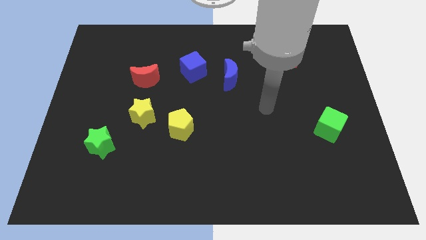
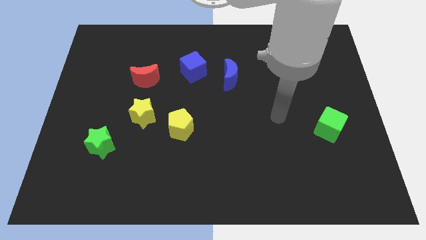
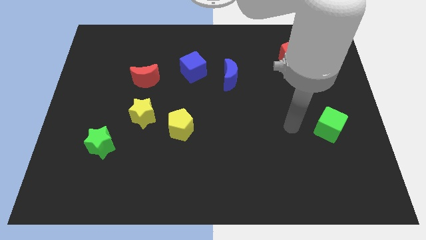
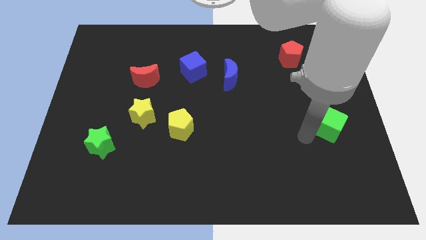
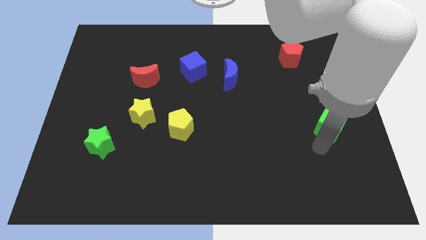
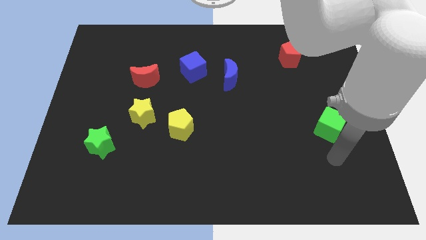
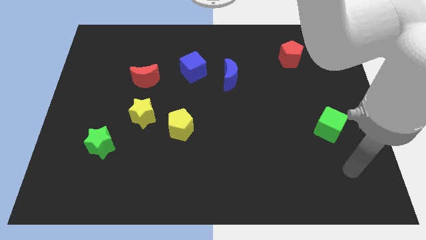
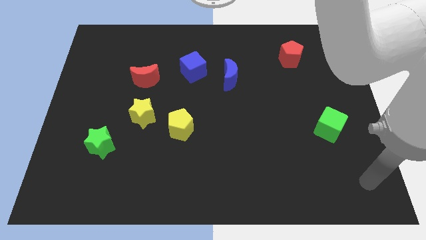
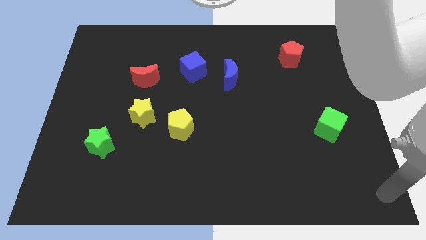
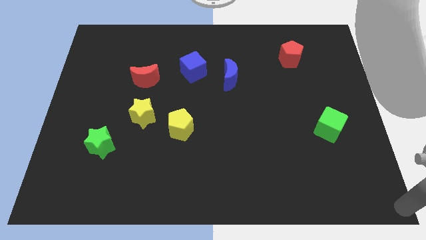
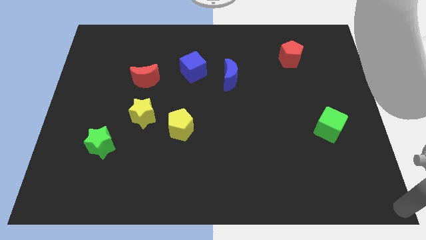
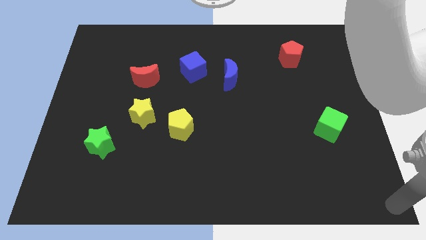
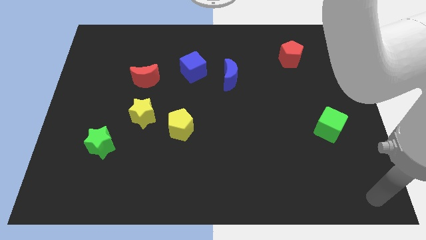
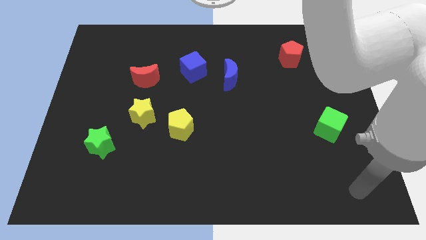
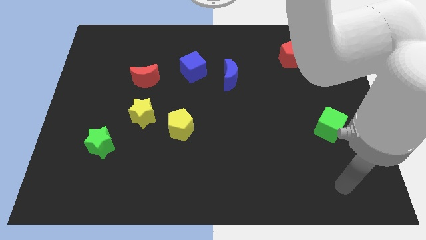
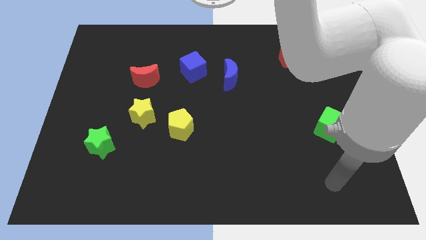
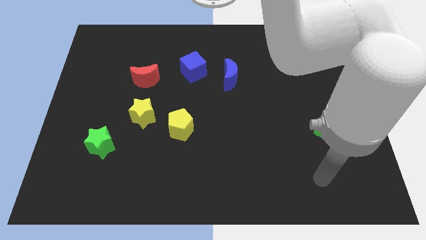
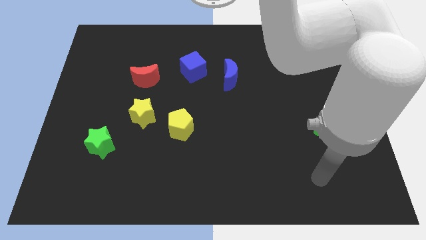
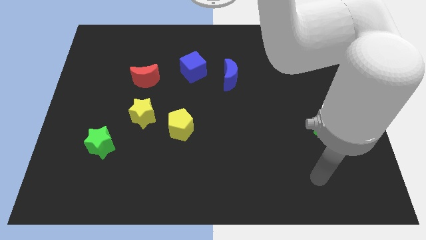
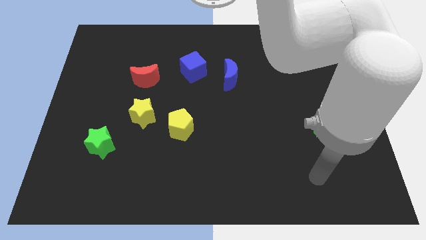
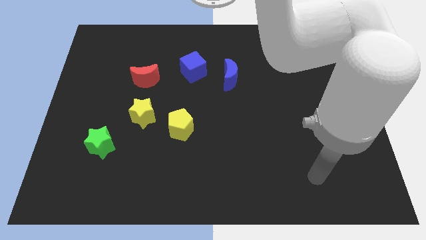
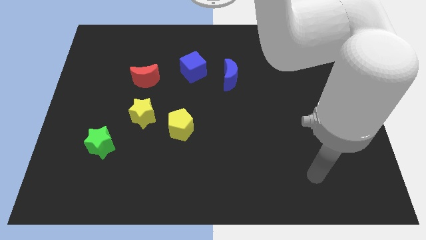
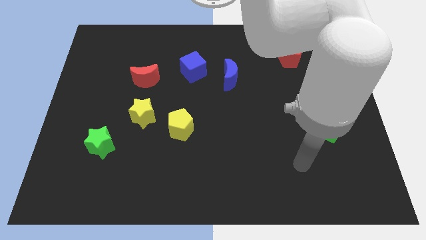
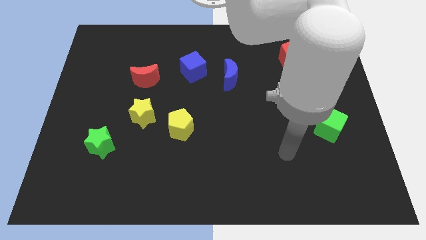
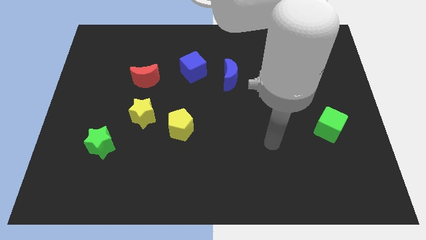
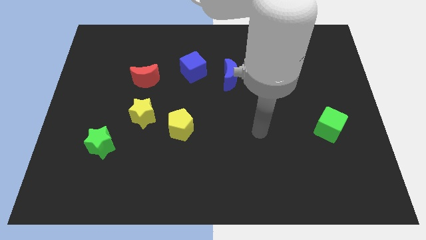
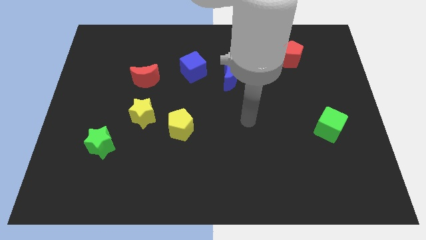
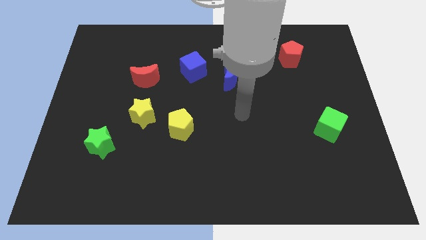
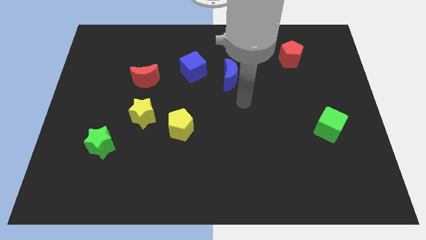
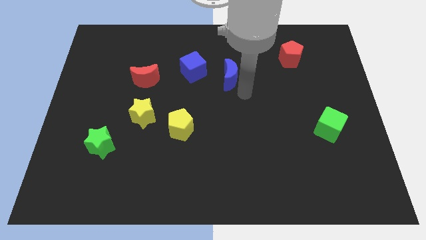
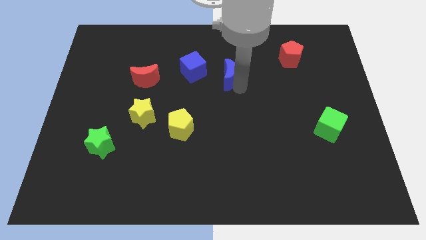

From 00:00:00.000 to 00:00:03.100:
point your arm at the right of the blue crescent

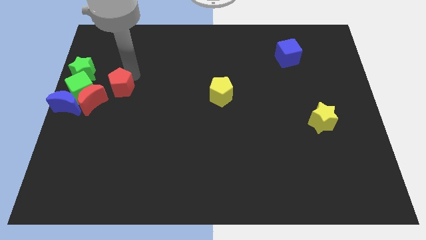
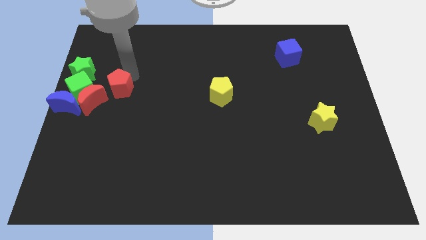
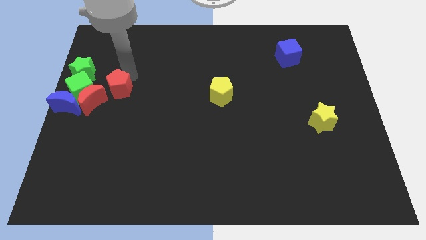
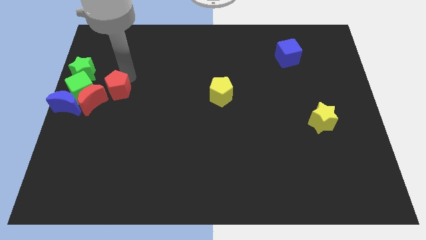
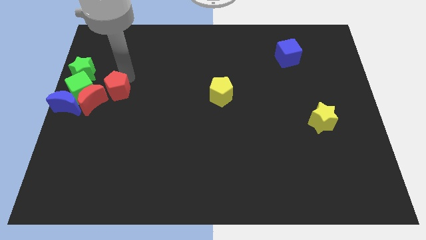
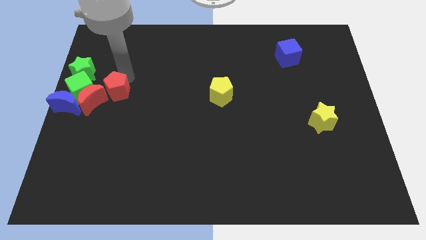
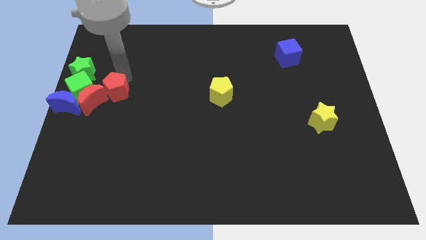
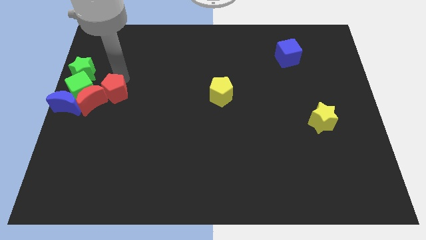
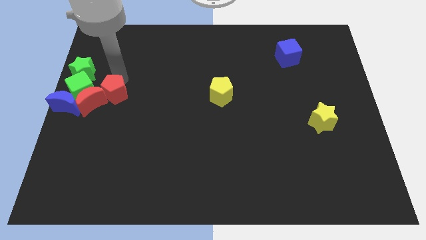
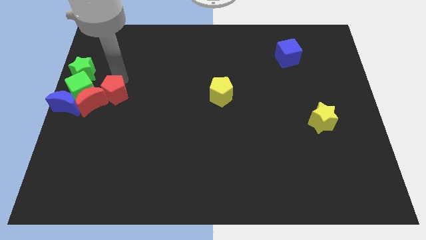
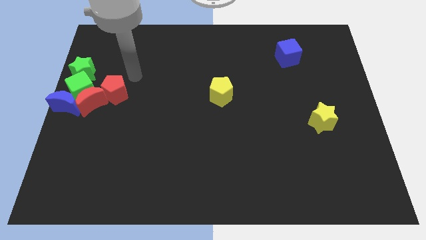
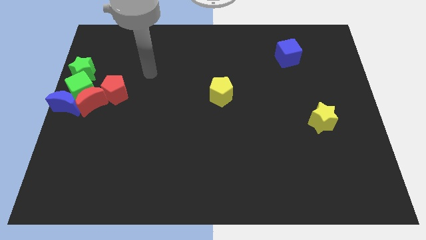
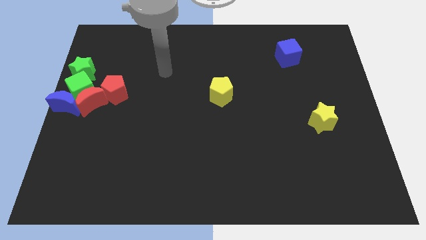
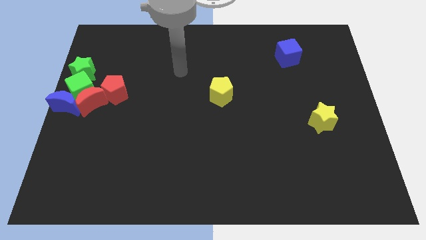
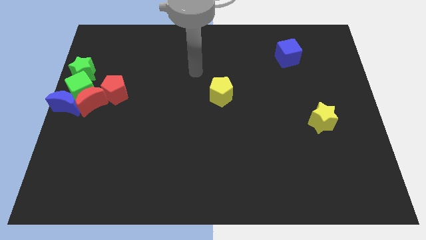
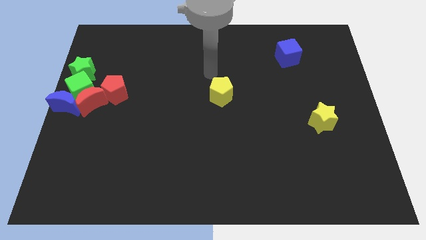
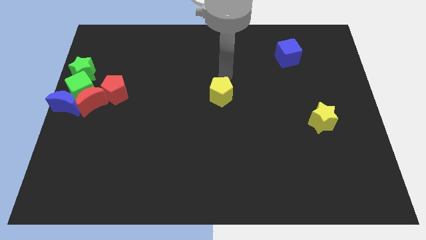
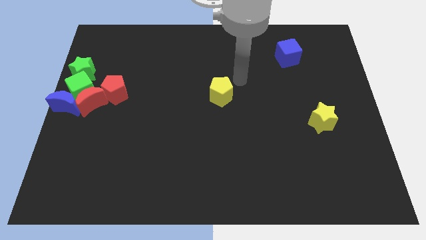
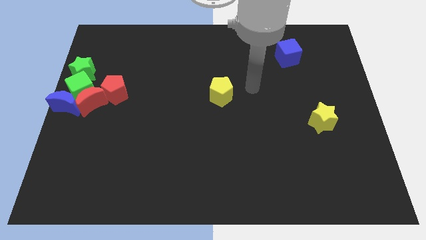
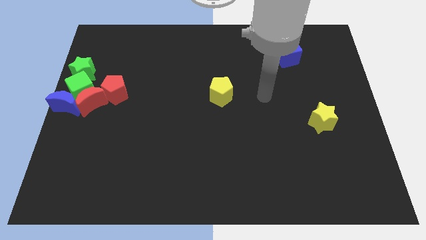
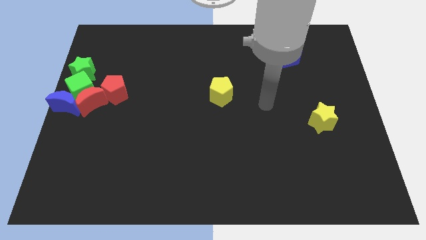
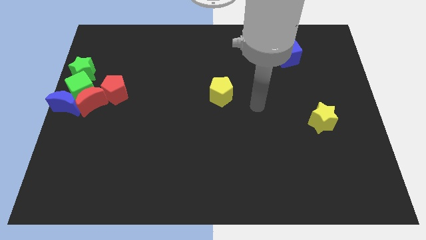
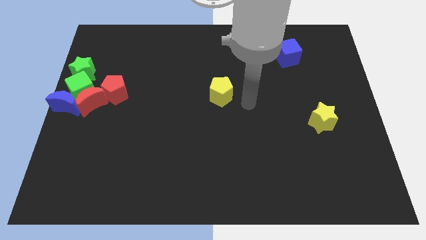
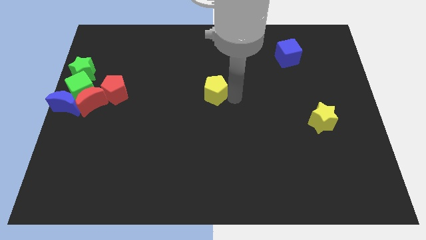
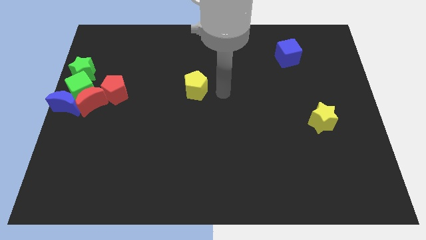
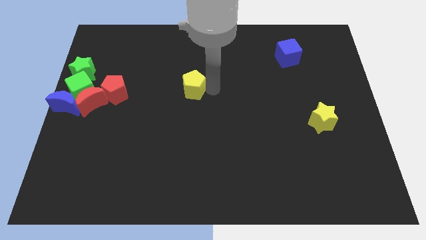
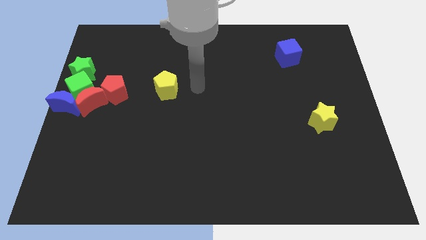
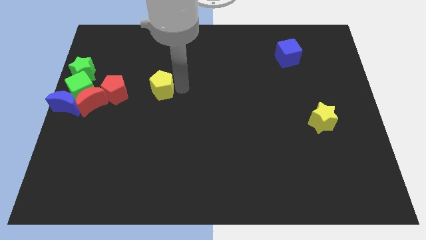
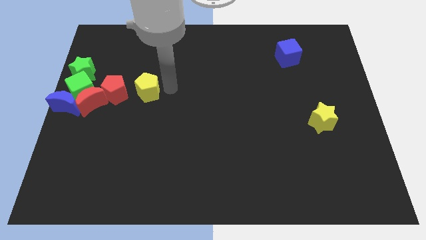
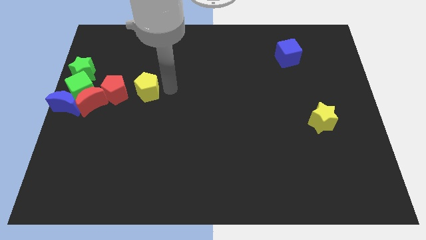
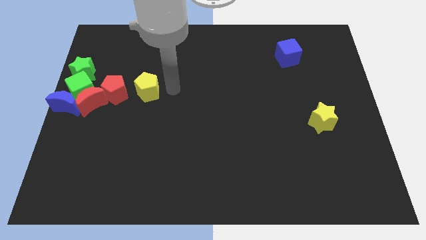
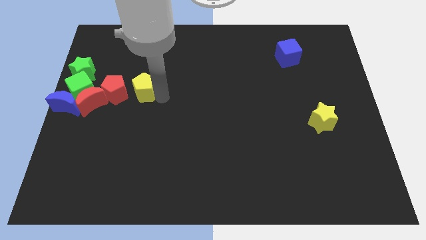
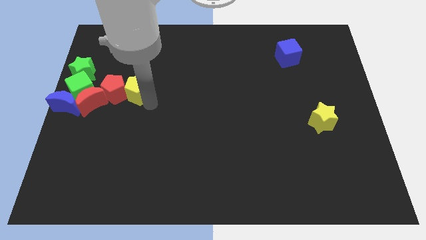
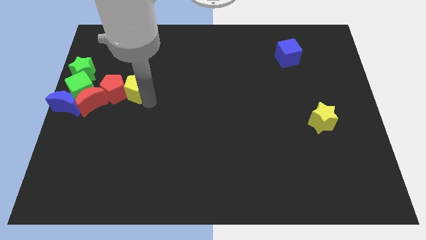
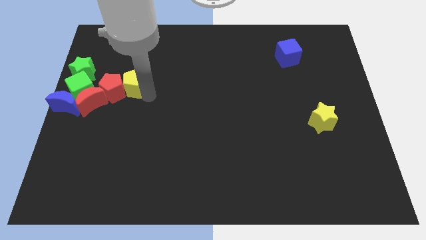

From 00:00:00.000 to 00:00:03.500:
move the yellow pentagon to the right of the red pentagon

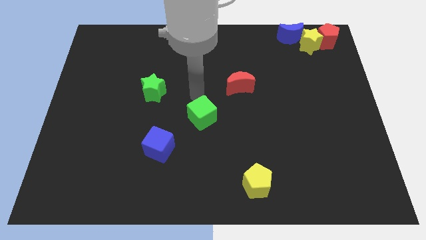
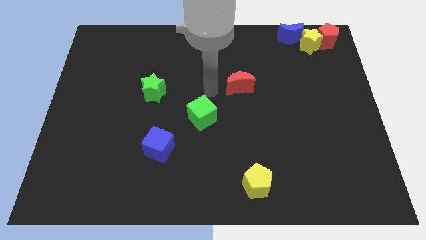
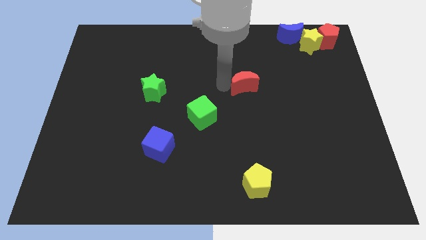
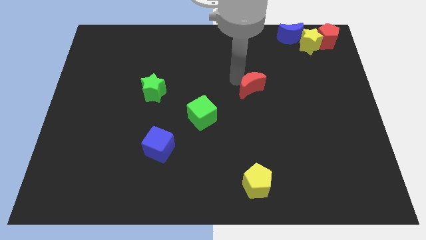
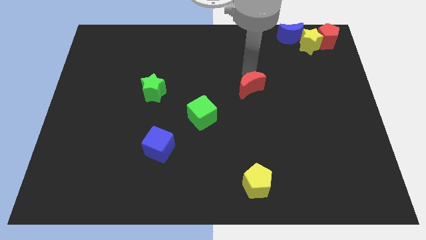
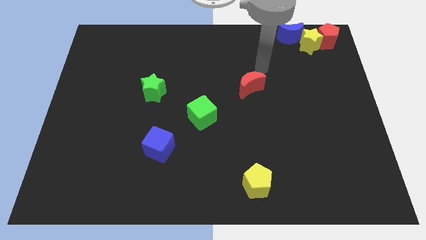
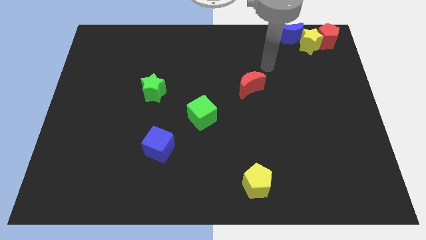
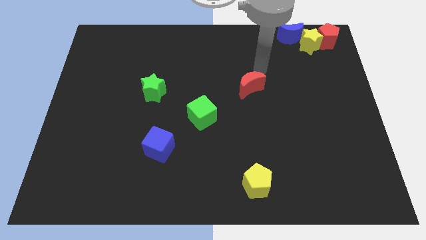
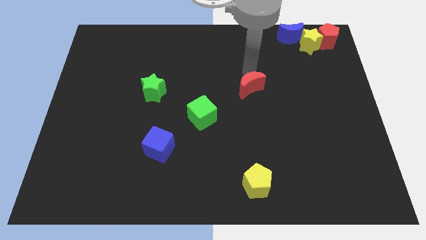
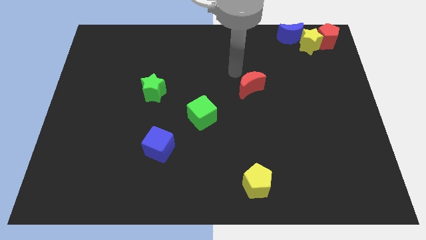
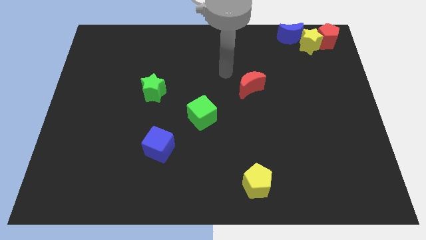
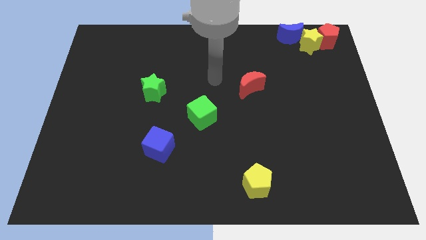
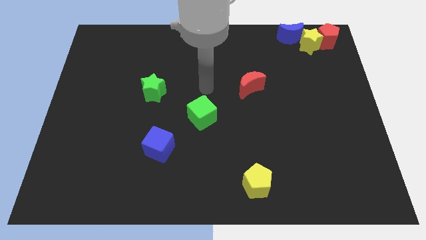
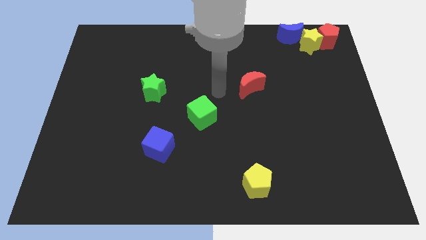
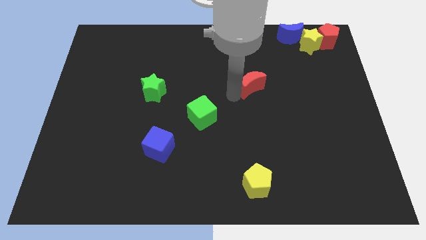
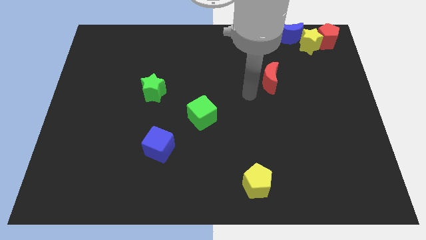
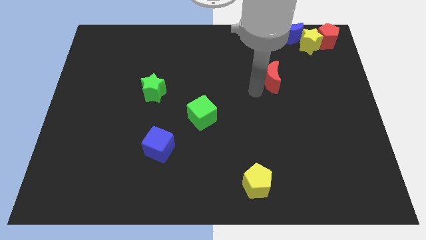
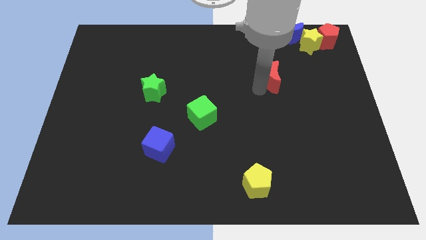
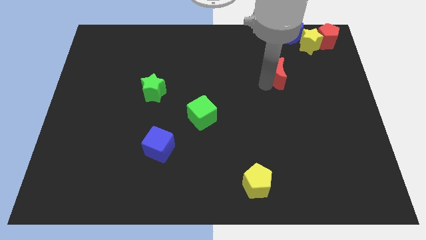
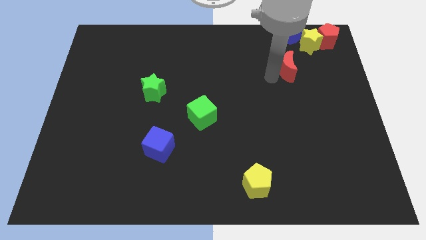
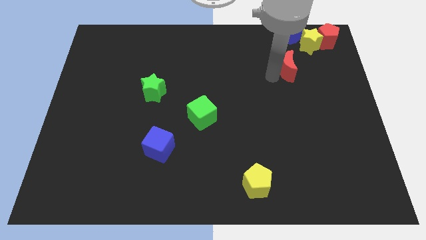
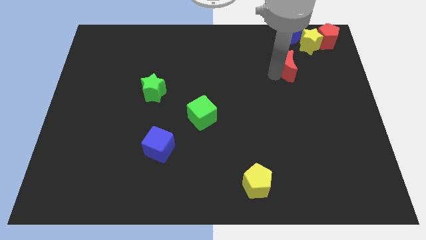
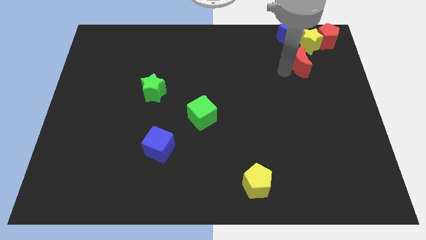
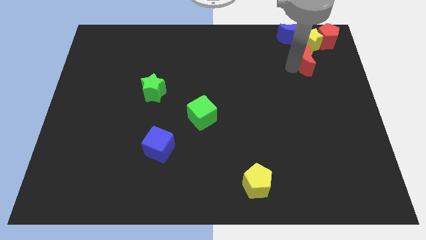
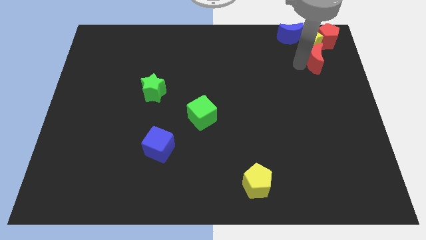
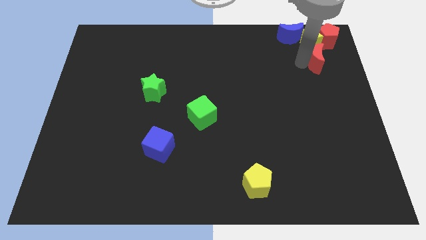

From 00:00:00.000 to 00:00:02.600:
push the red moon below the yellow star
